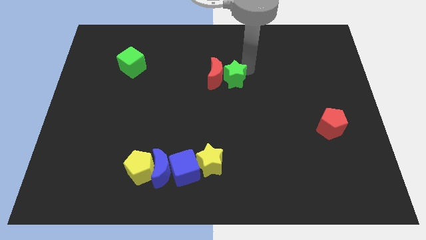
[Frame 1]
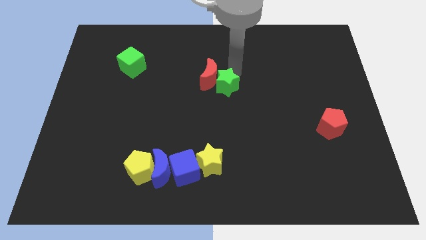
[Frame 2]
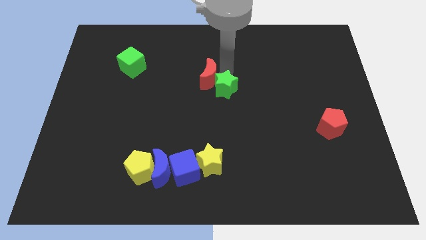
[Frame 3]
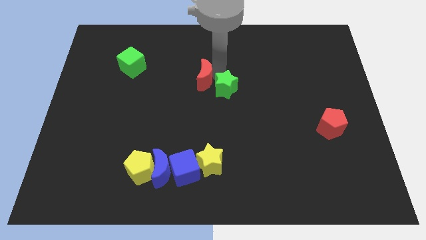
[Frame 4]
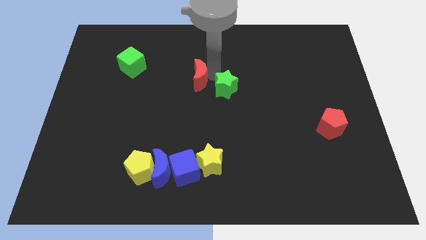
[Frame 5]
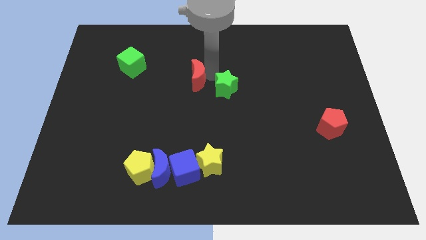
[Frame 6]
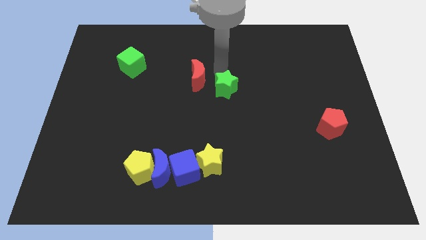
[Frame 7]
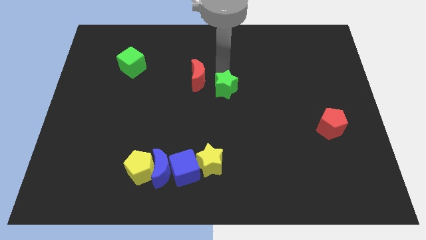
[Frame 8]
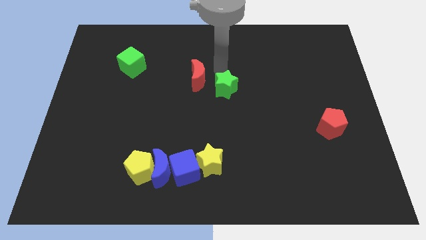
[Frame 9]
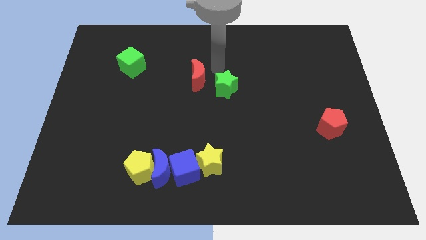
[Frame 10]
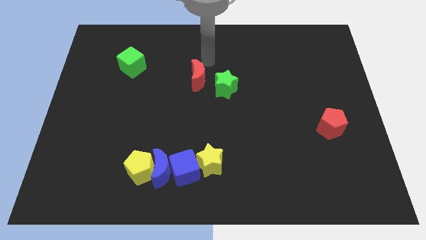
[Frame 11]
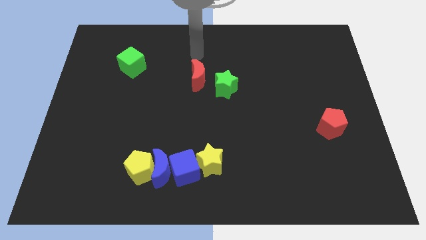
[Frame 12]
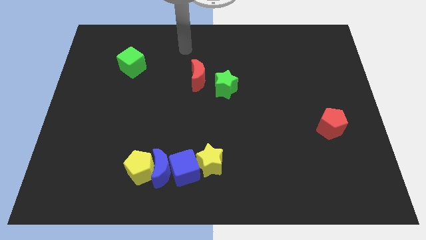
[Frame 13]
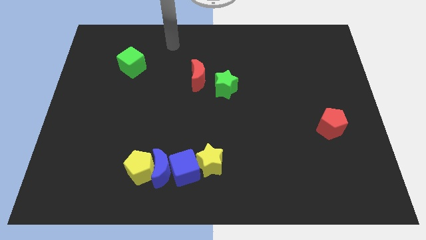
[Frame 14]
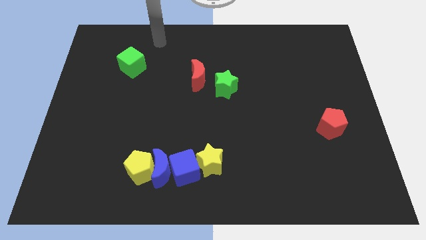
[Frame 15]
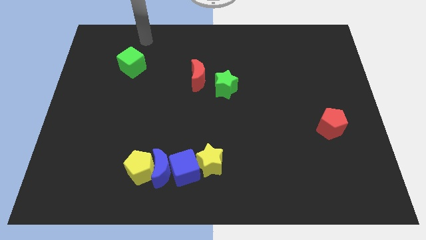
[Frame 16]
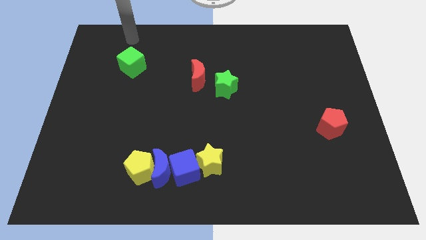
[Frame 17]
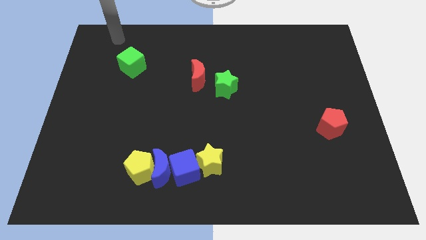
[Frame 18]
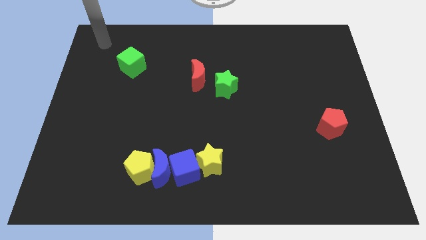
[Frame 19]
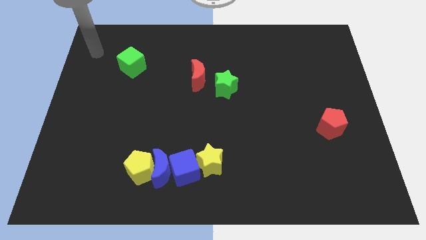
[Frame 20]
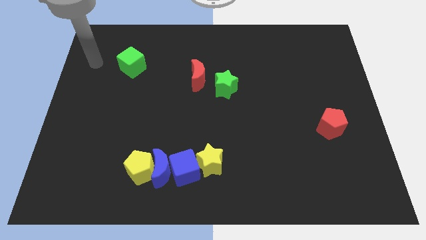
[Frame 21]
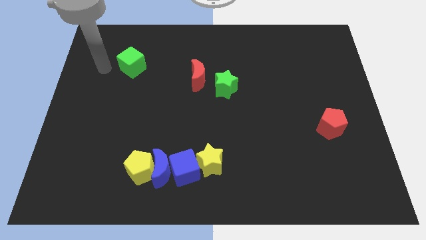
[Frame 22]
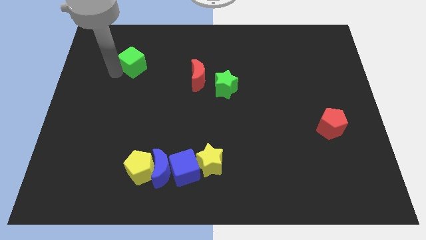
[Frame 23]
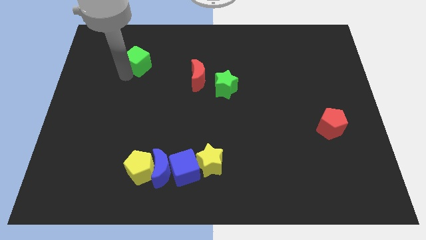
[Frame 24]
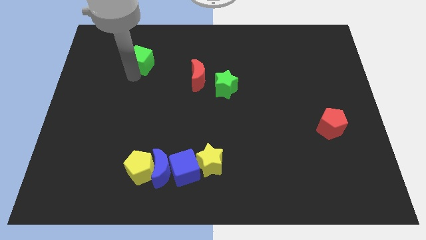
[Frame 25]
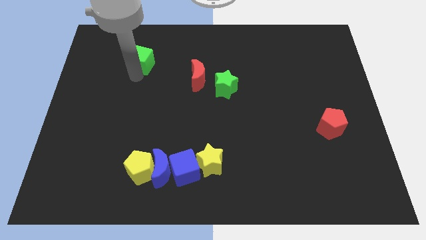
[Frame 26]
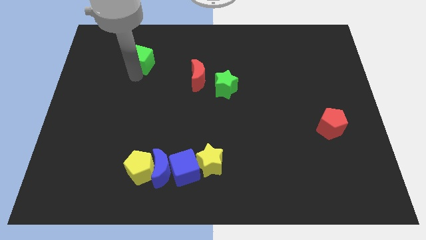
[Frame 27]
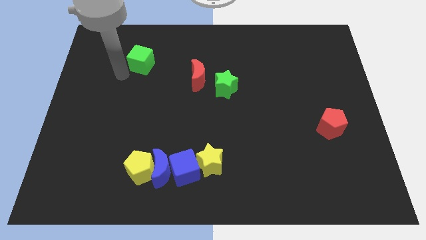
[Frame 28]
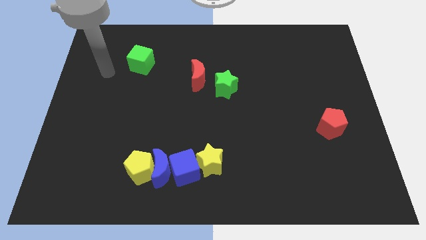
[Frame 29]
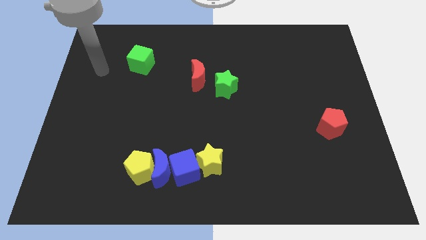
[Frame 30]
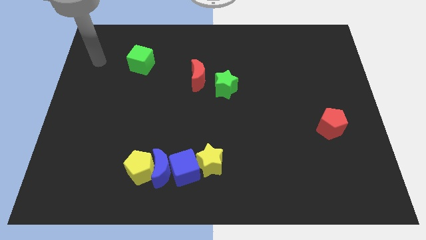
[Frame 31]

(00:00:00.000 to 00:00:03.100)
move green cube towards the red moon

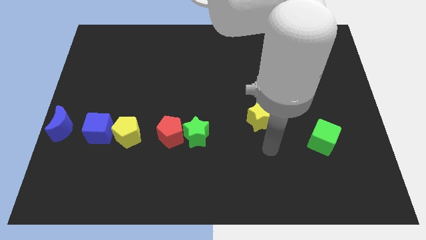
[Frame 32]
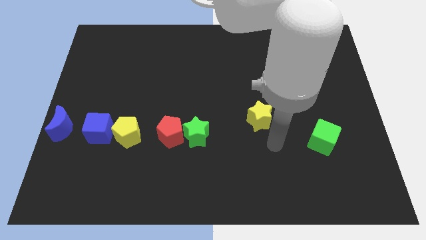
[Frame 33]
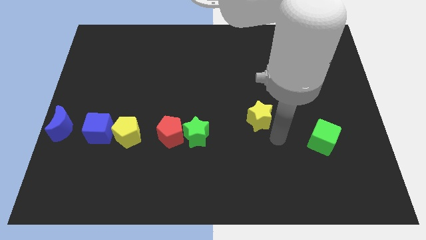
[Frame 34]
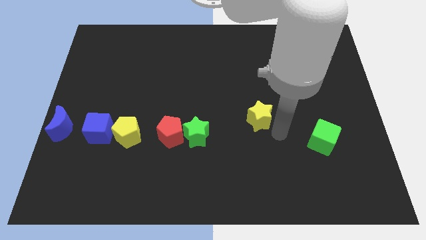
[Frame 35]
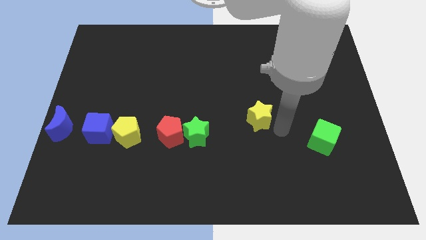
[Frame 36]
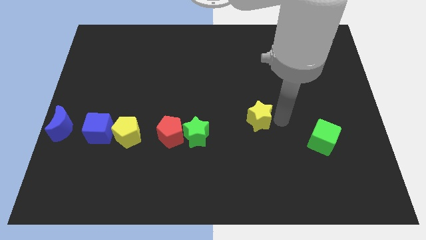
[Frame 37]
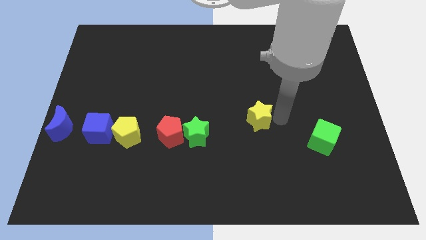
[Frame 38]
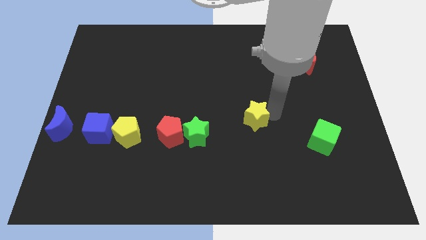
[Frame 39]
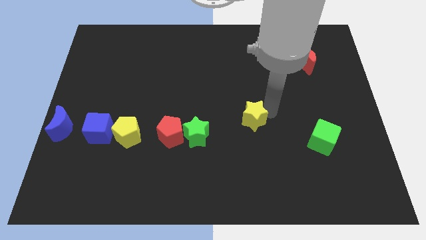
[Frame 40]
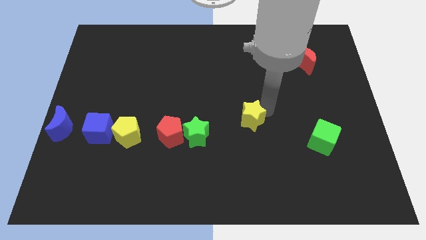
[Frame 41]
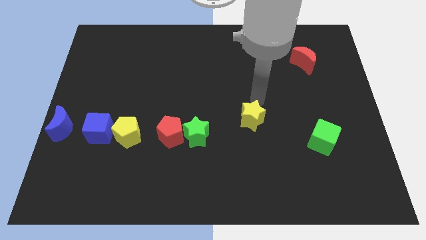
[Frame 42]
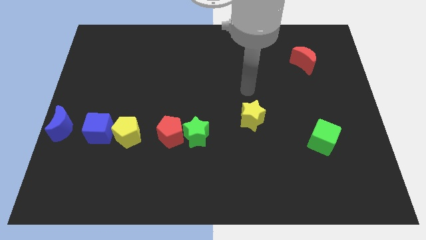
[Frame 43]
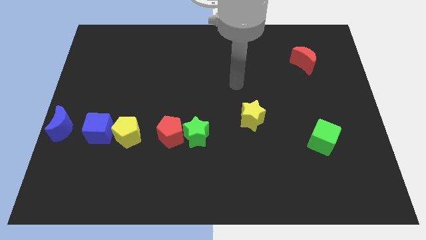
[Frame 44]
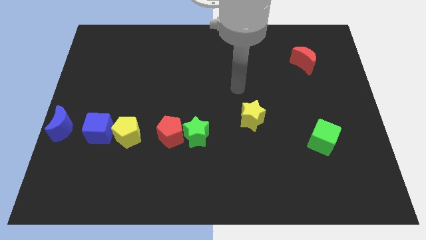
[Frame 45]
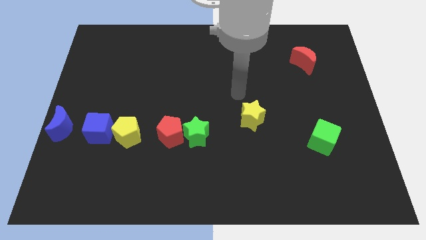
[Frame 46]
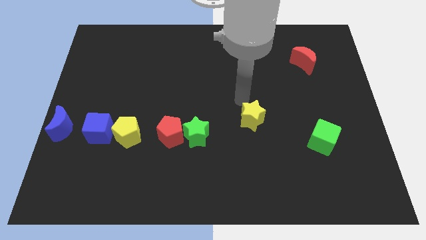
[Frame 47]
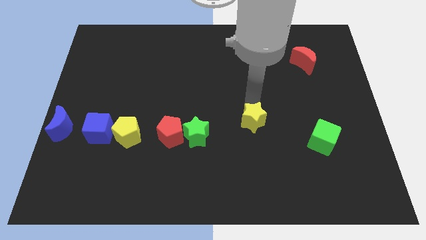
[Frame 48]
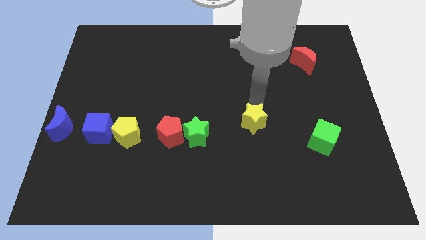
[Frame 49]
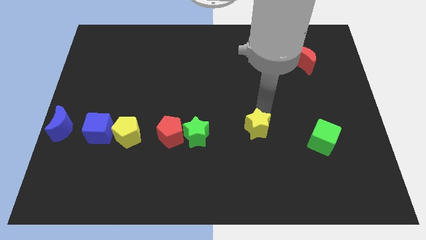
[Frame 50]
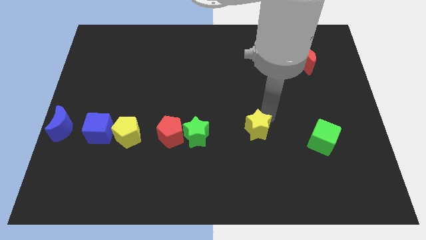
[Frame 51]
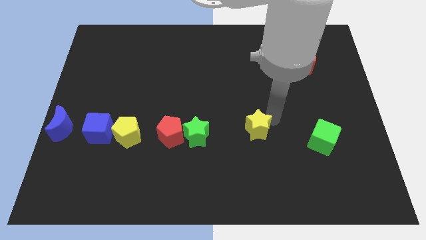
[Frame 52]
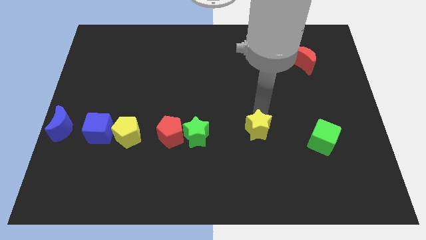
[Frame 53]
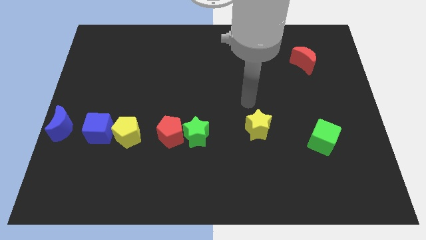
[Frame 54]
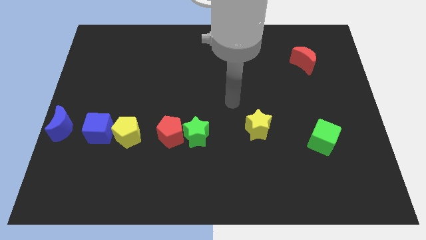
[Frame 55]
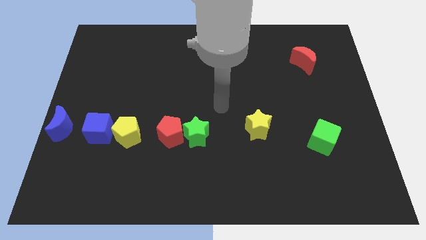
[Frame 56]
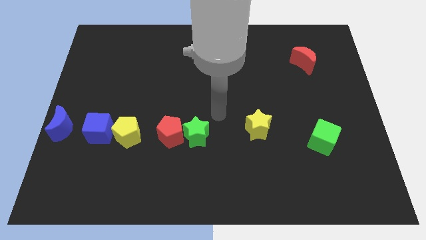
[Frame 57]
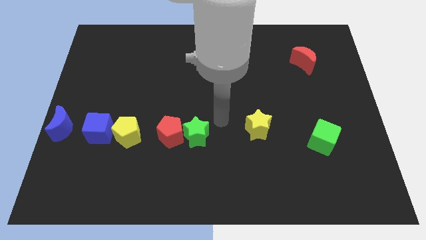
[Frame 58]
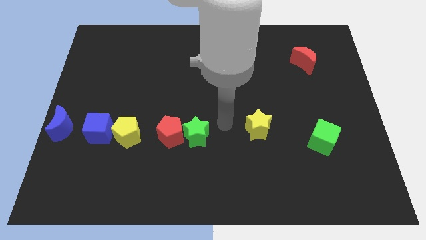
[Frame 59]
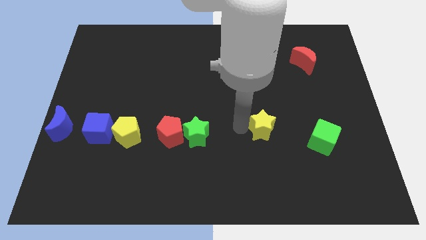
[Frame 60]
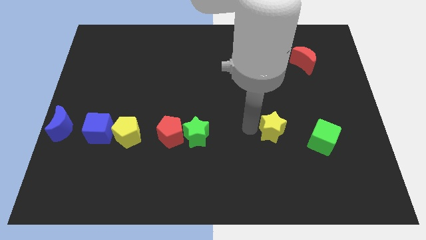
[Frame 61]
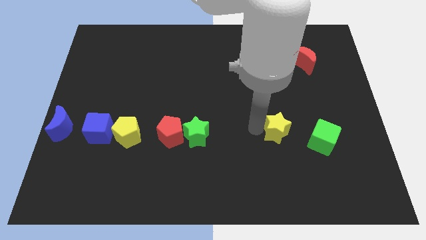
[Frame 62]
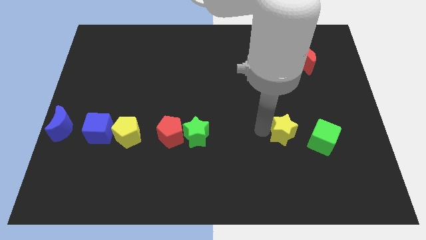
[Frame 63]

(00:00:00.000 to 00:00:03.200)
slide the yellow star to the right of the green star

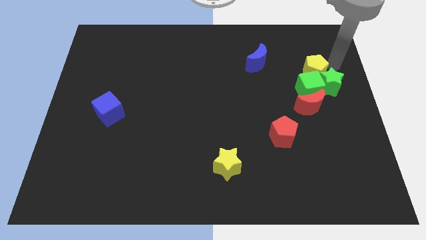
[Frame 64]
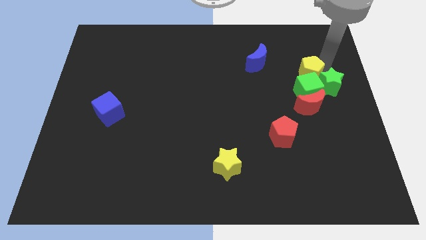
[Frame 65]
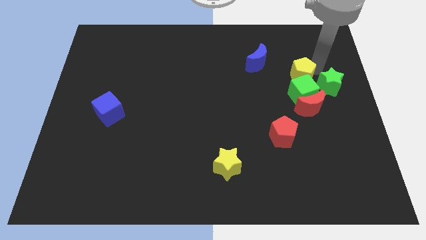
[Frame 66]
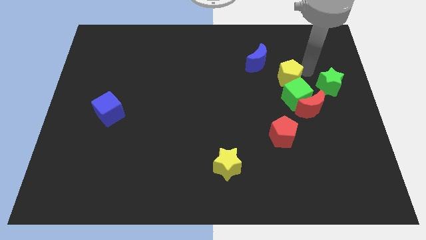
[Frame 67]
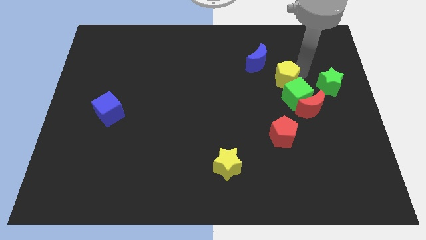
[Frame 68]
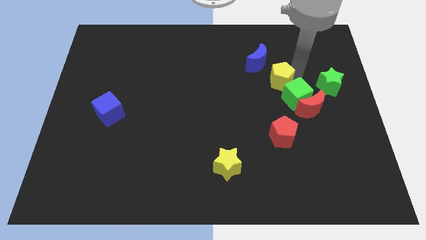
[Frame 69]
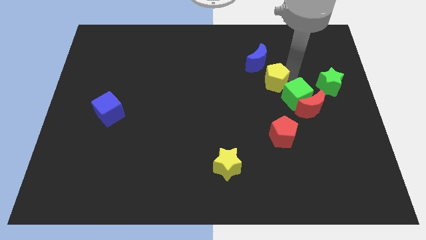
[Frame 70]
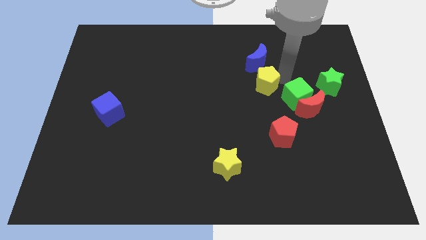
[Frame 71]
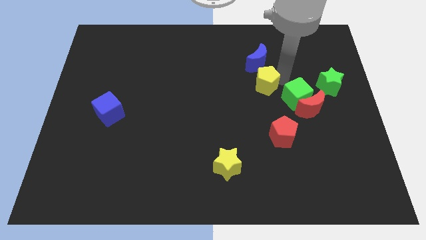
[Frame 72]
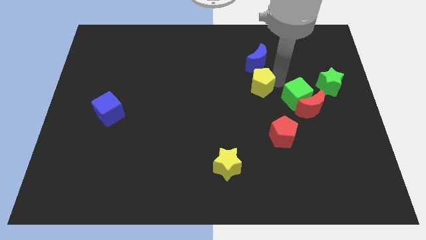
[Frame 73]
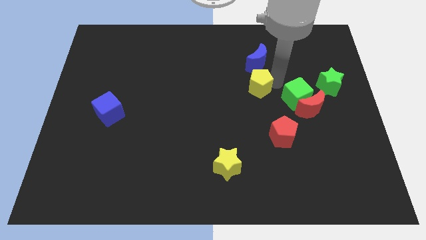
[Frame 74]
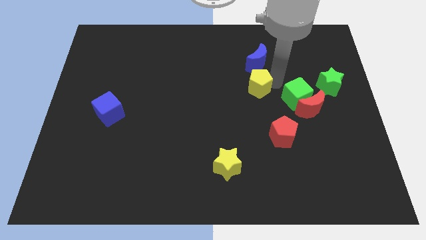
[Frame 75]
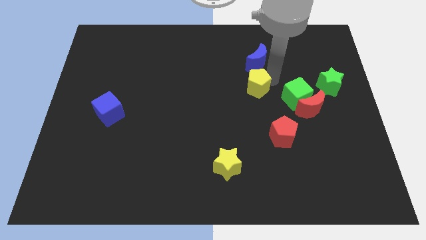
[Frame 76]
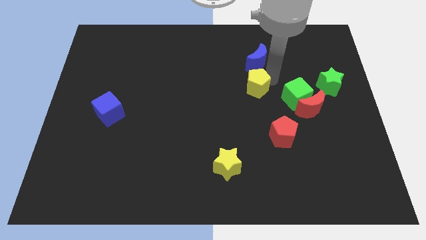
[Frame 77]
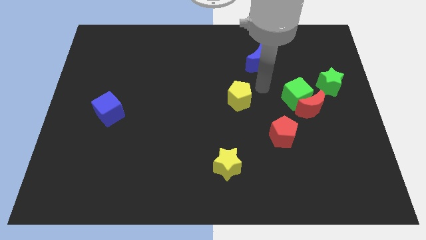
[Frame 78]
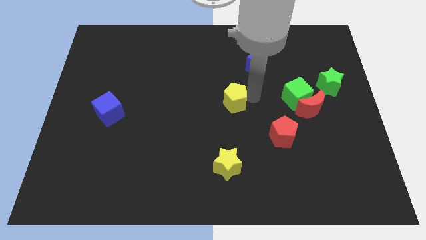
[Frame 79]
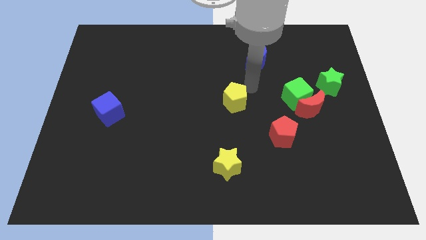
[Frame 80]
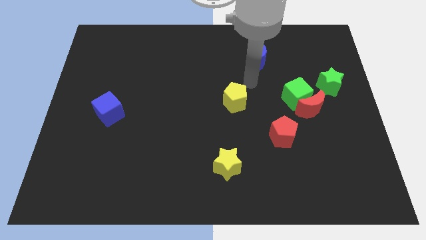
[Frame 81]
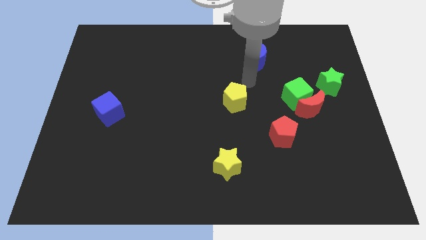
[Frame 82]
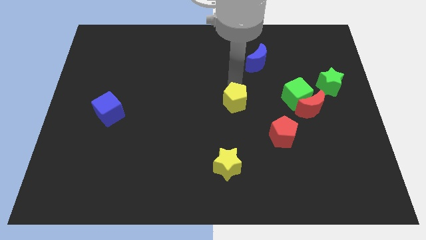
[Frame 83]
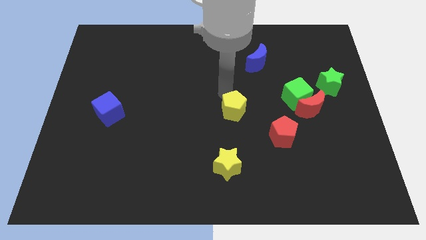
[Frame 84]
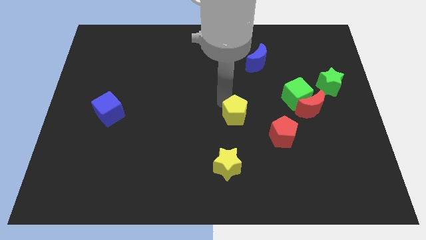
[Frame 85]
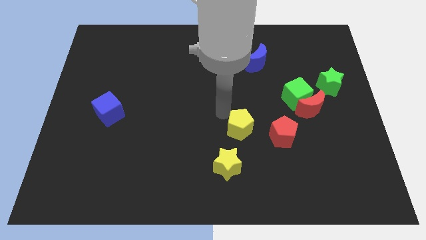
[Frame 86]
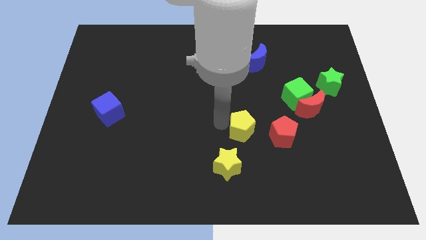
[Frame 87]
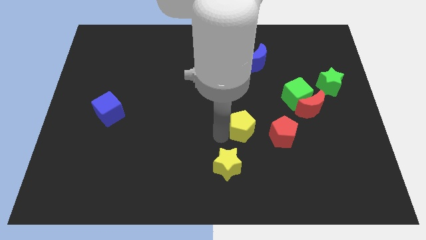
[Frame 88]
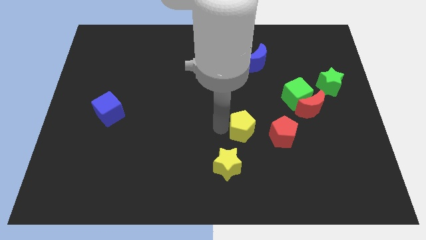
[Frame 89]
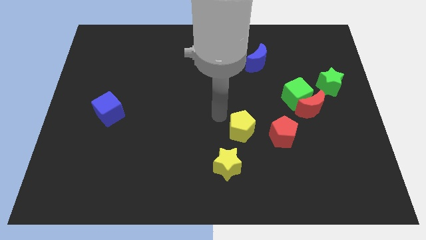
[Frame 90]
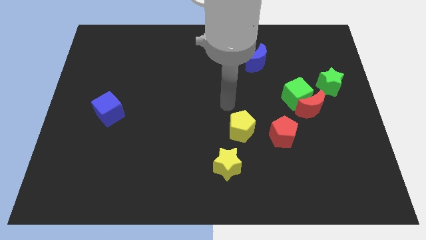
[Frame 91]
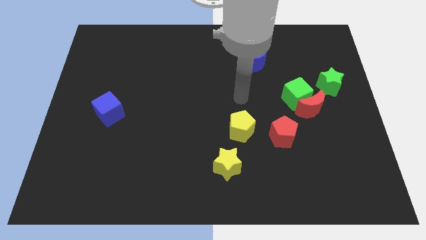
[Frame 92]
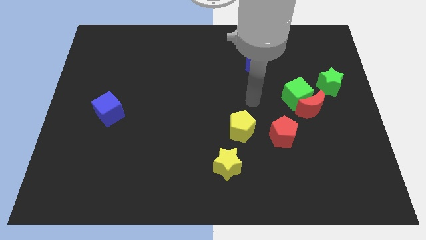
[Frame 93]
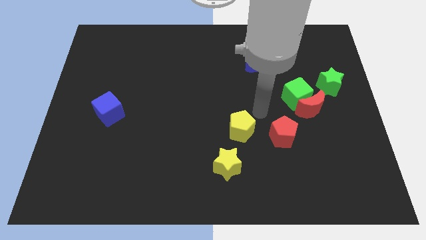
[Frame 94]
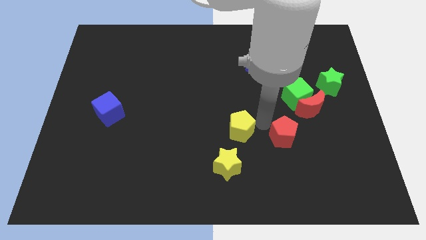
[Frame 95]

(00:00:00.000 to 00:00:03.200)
form a diagonal line out of yellow pentagon and the green blocks
